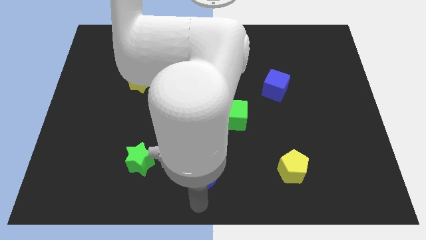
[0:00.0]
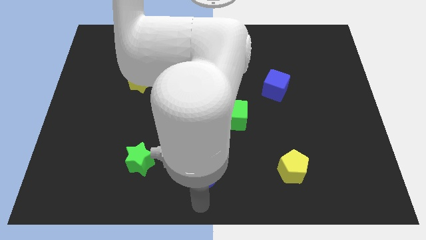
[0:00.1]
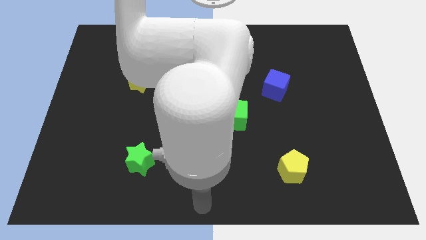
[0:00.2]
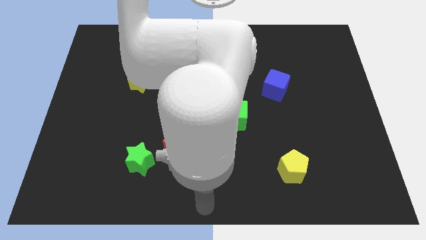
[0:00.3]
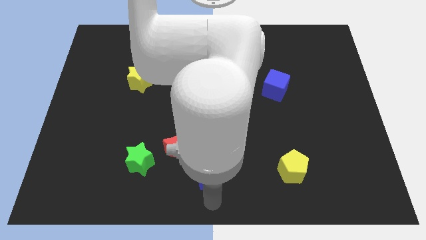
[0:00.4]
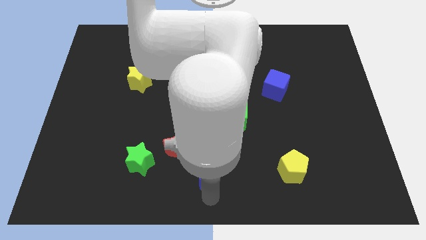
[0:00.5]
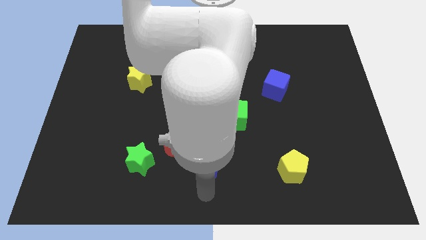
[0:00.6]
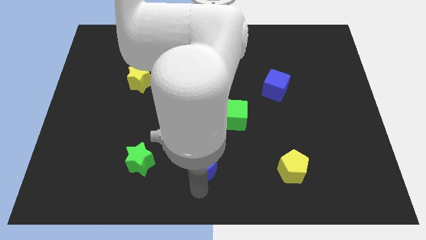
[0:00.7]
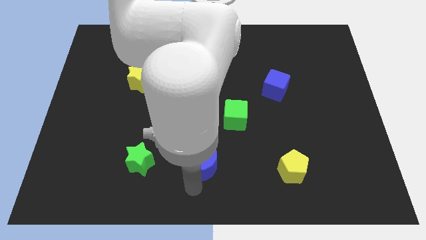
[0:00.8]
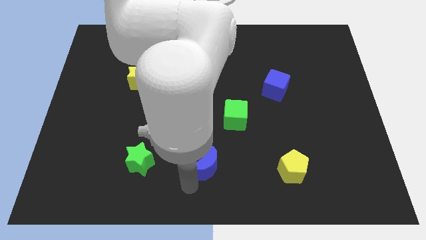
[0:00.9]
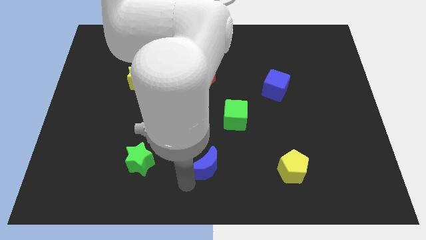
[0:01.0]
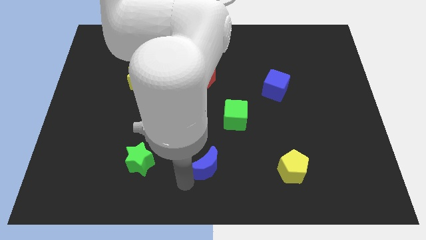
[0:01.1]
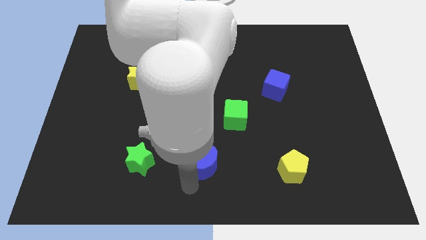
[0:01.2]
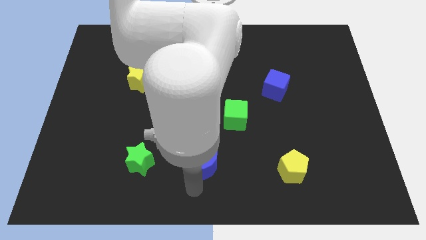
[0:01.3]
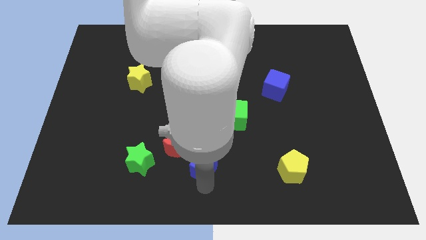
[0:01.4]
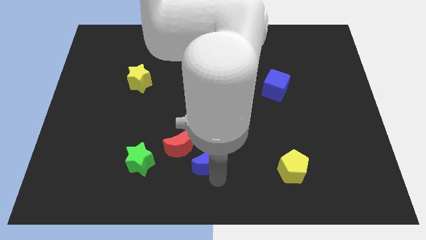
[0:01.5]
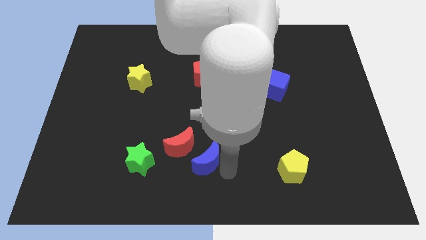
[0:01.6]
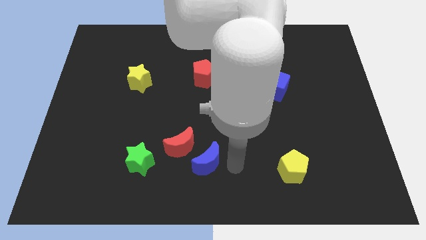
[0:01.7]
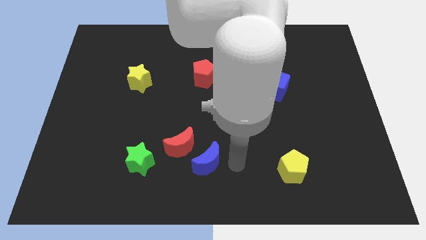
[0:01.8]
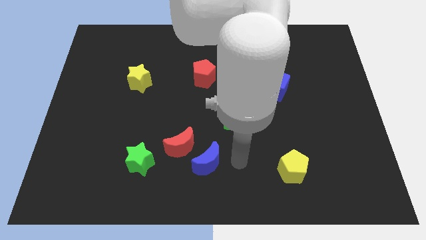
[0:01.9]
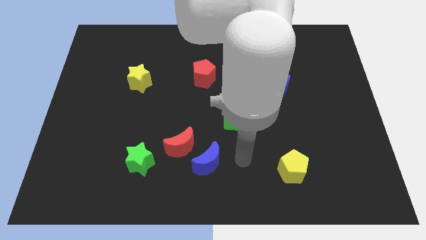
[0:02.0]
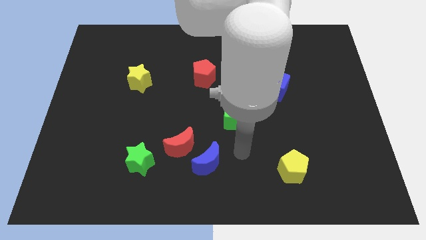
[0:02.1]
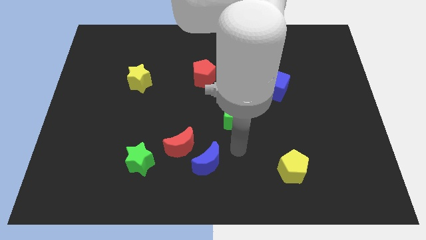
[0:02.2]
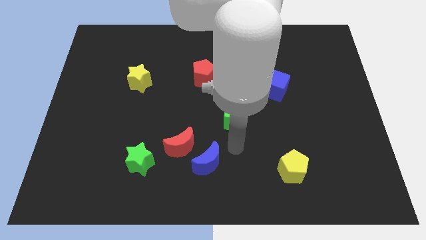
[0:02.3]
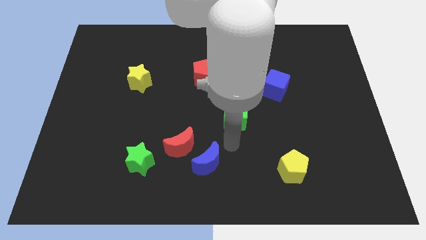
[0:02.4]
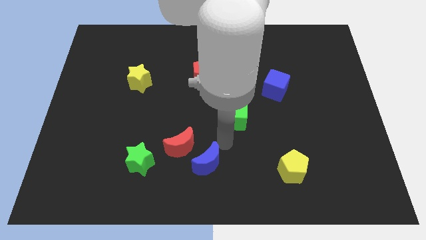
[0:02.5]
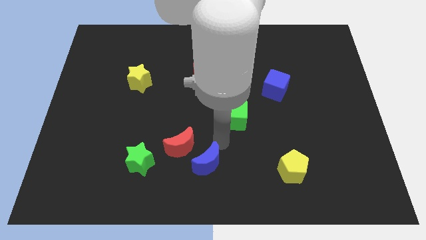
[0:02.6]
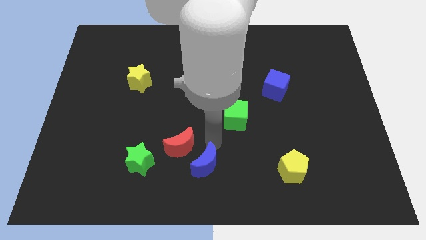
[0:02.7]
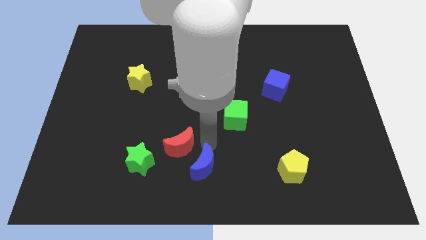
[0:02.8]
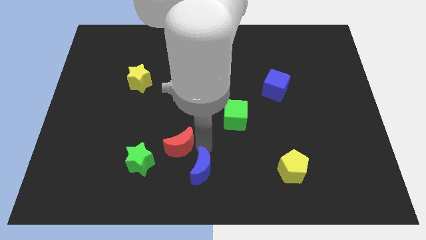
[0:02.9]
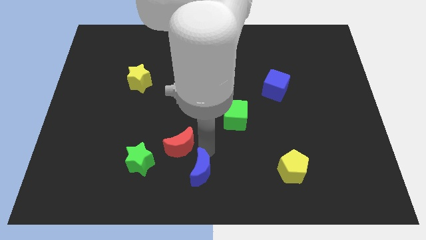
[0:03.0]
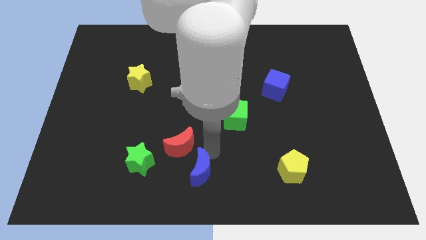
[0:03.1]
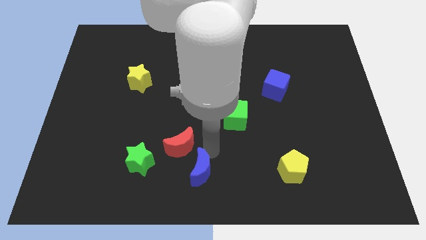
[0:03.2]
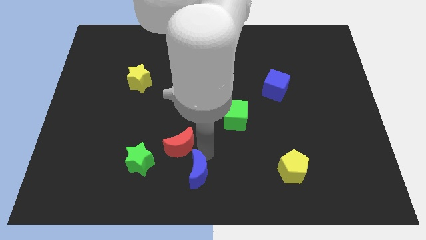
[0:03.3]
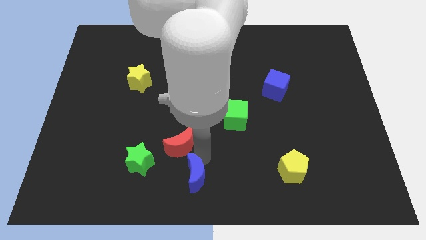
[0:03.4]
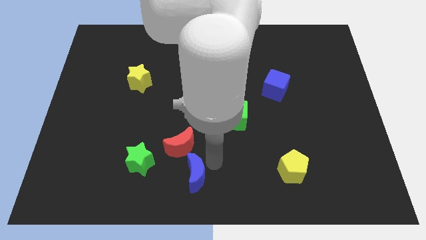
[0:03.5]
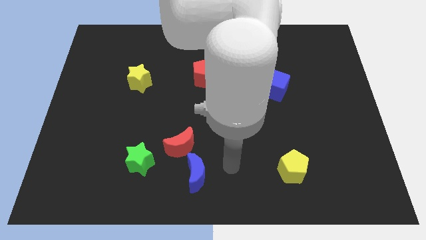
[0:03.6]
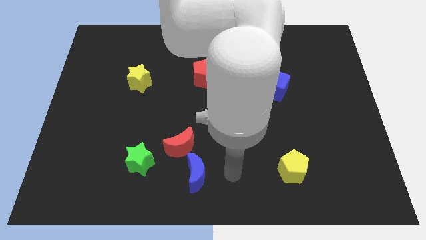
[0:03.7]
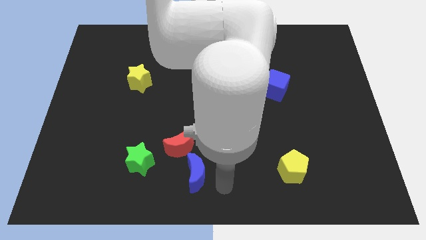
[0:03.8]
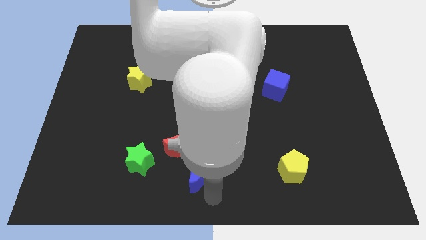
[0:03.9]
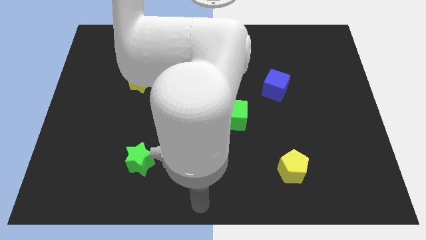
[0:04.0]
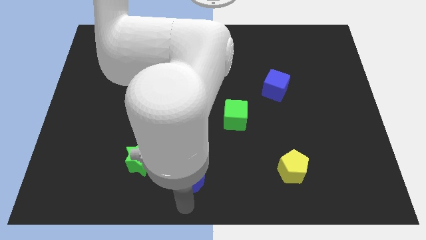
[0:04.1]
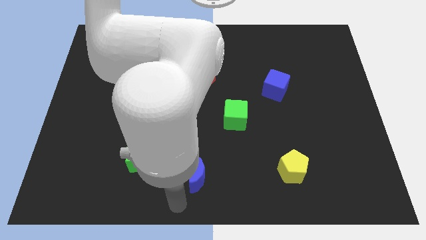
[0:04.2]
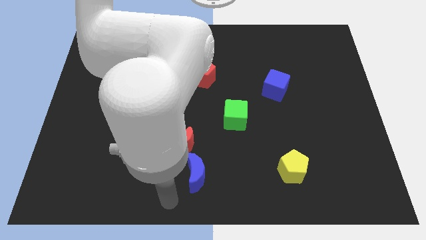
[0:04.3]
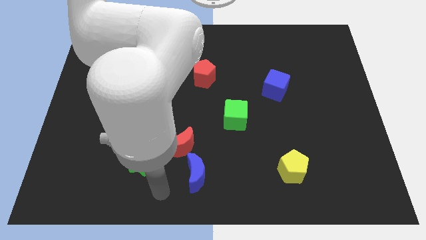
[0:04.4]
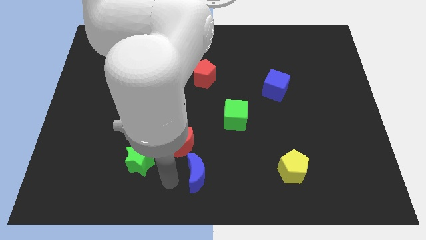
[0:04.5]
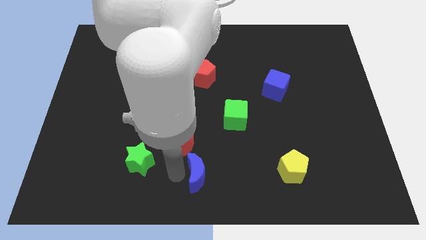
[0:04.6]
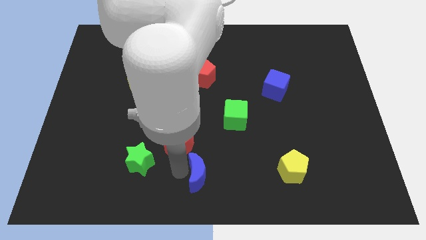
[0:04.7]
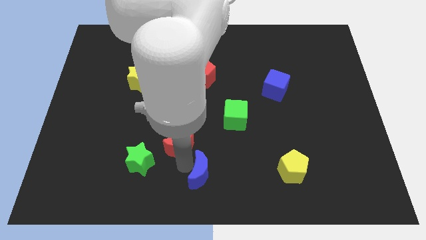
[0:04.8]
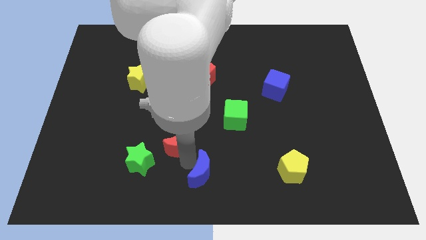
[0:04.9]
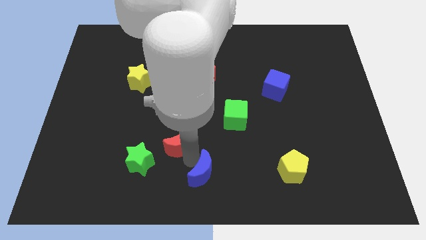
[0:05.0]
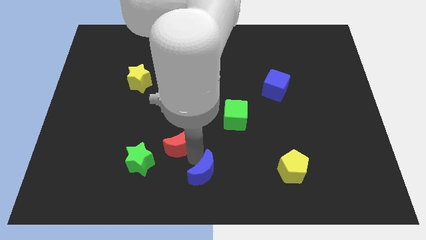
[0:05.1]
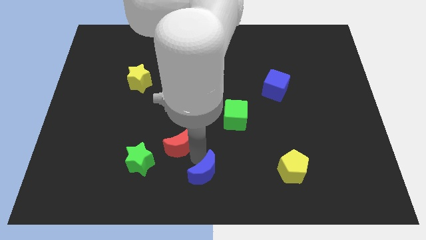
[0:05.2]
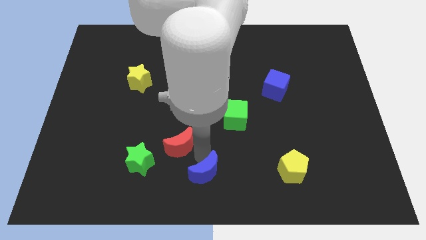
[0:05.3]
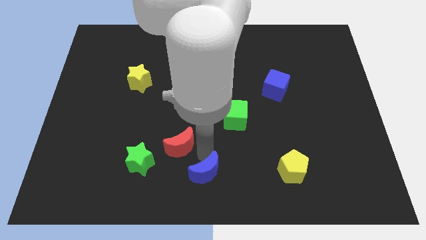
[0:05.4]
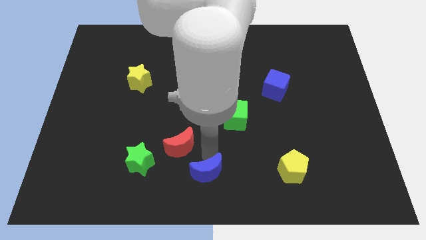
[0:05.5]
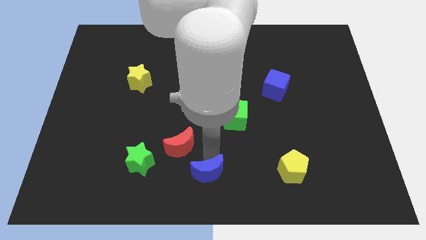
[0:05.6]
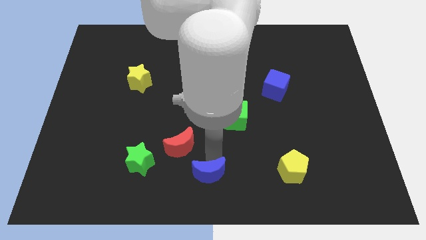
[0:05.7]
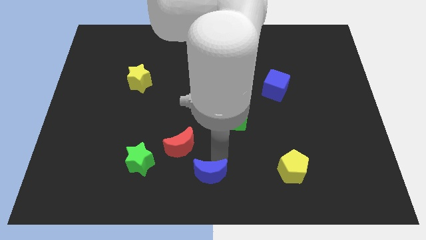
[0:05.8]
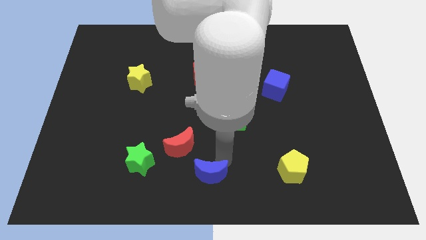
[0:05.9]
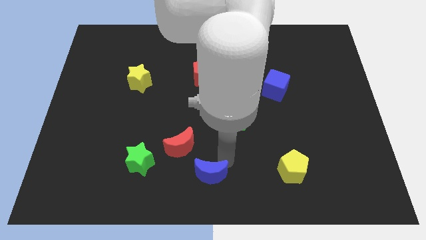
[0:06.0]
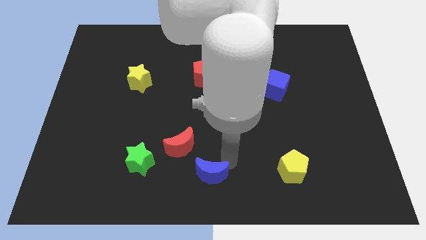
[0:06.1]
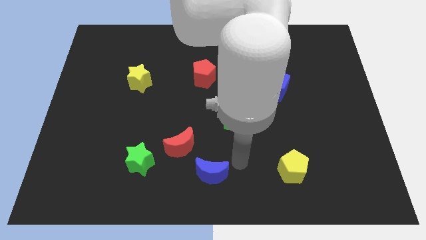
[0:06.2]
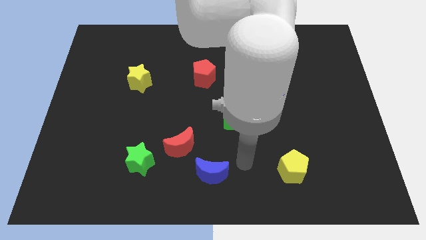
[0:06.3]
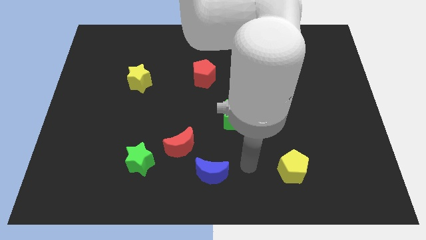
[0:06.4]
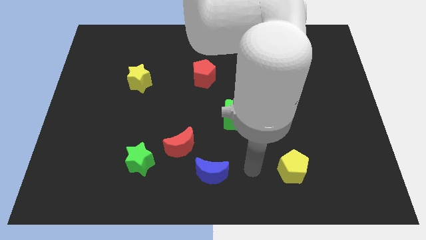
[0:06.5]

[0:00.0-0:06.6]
place the blue moon below the red moon

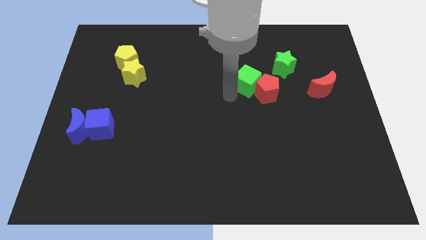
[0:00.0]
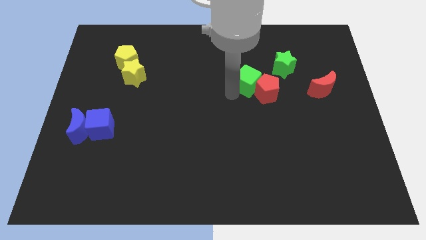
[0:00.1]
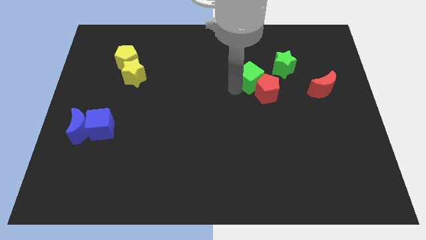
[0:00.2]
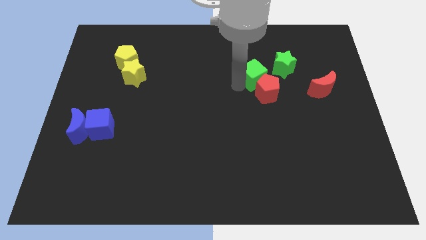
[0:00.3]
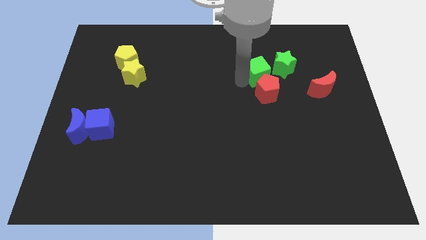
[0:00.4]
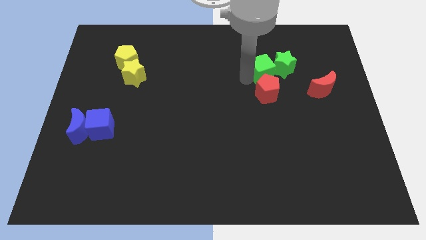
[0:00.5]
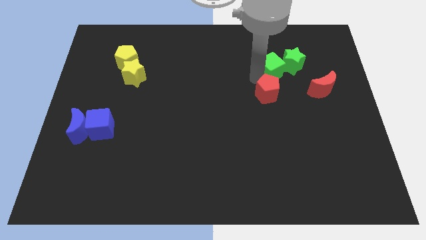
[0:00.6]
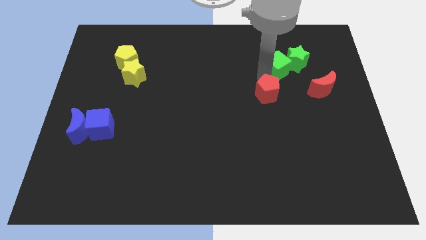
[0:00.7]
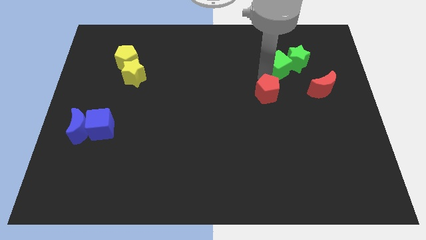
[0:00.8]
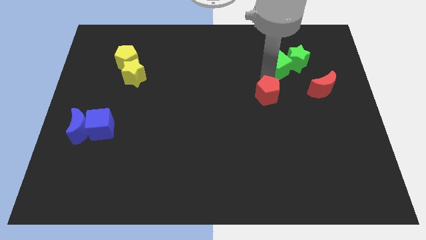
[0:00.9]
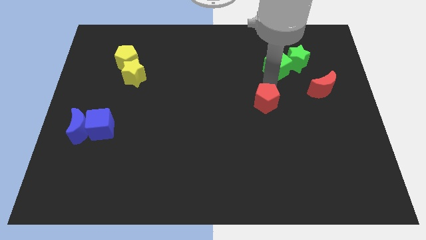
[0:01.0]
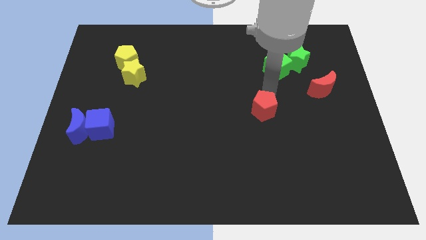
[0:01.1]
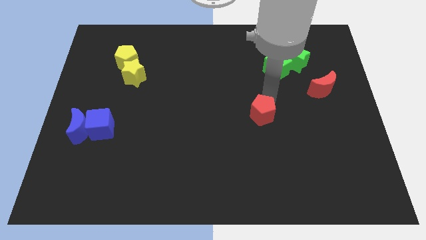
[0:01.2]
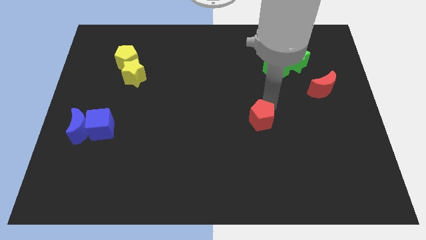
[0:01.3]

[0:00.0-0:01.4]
move green cube to the green star

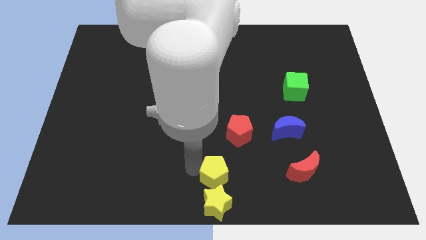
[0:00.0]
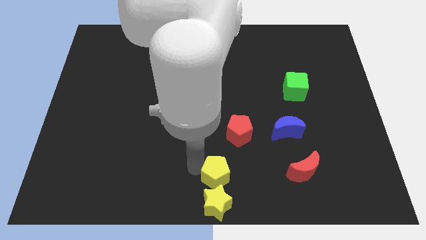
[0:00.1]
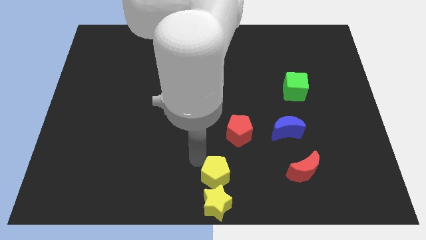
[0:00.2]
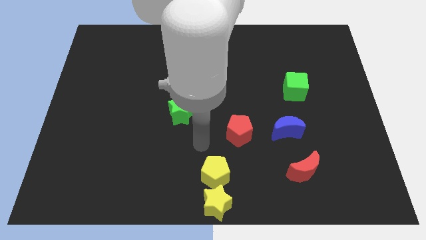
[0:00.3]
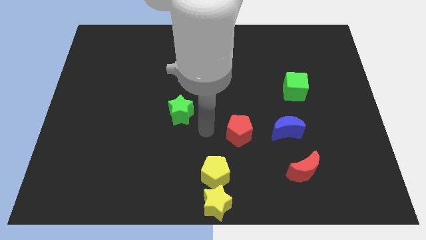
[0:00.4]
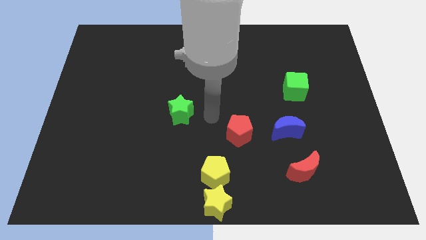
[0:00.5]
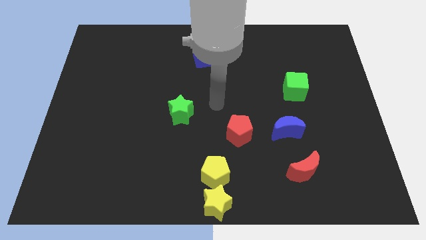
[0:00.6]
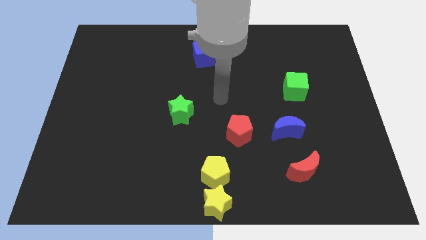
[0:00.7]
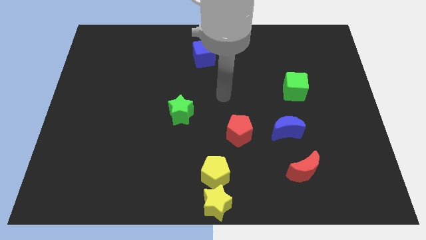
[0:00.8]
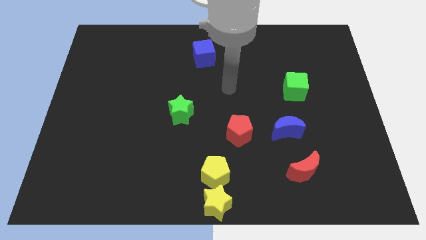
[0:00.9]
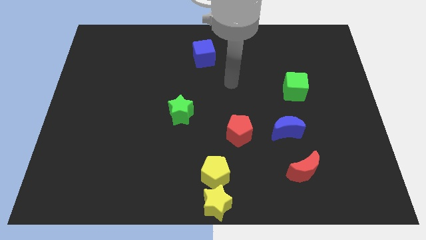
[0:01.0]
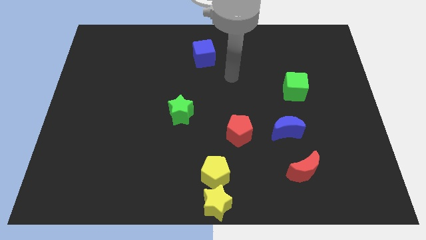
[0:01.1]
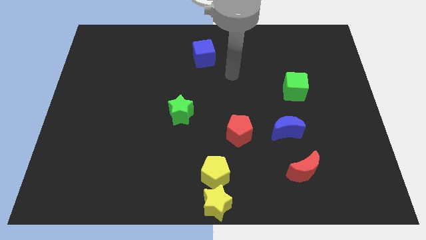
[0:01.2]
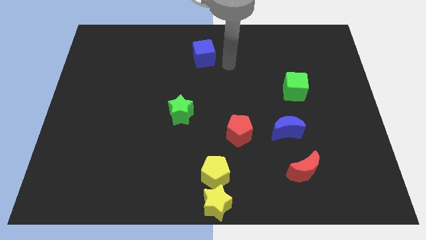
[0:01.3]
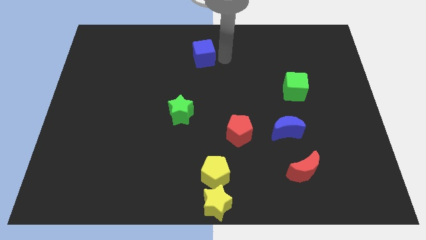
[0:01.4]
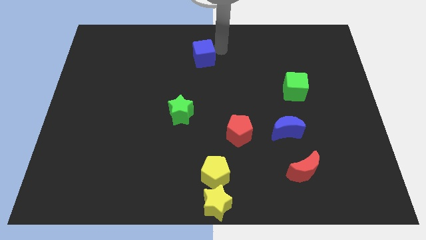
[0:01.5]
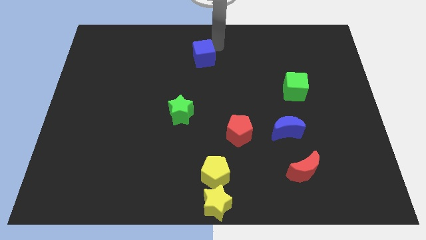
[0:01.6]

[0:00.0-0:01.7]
move the arm away from the yellow pentagon
